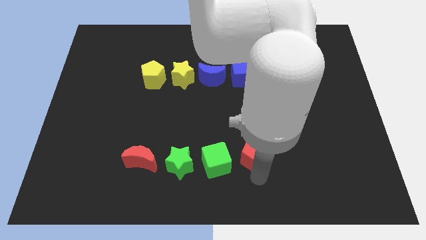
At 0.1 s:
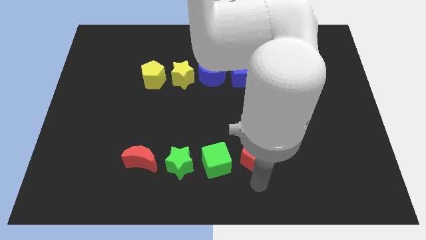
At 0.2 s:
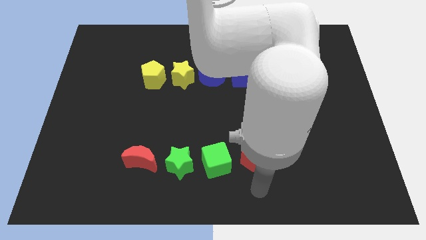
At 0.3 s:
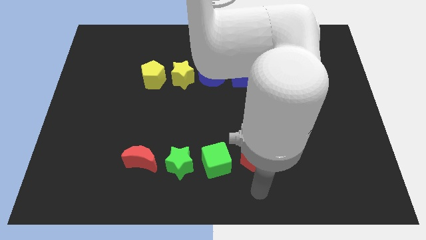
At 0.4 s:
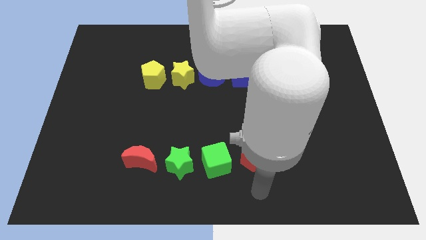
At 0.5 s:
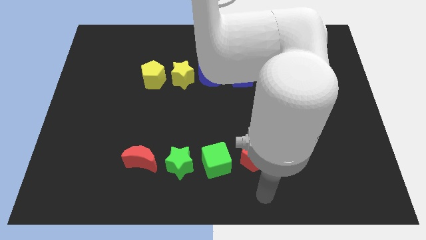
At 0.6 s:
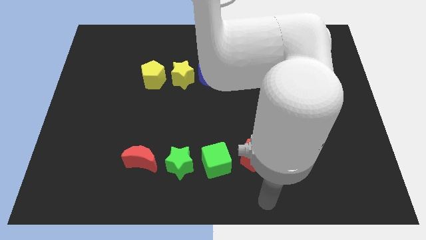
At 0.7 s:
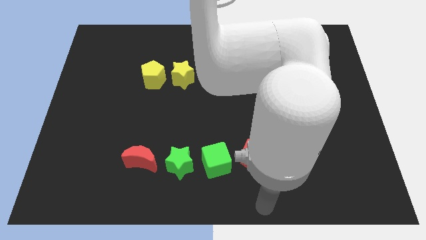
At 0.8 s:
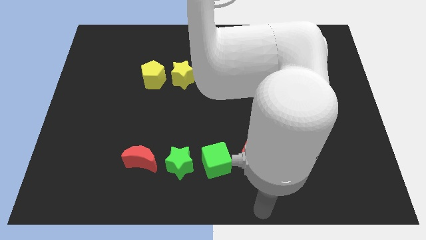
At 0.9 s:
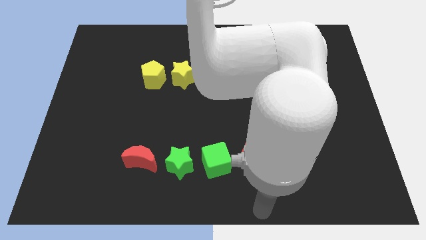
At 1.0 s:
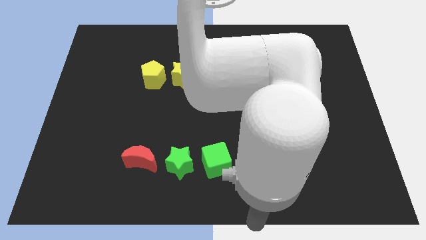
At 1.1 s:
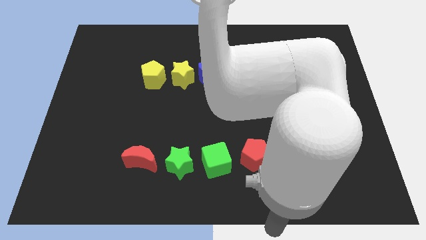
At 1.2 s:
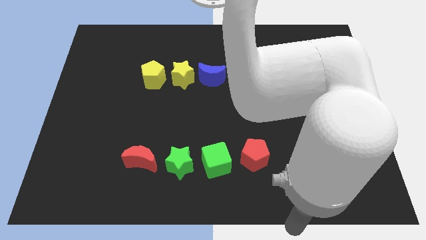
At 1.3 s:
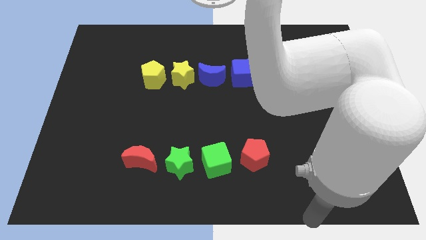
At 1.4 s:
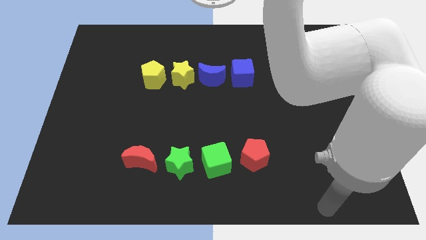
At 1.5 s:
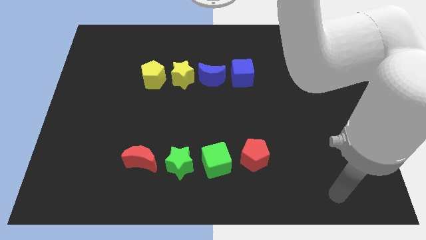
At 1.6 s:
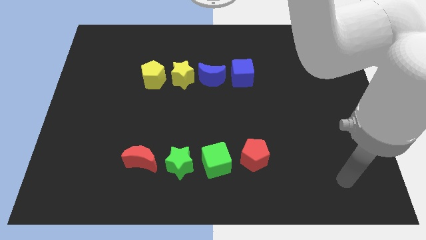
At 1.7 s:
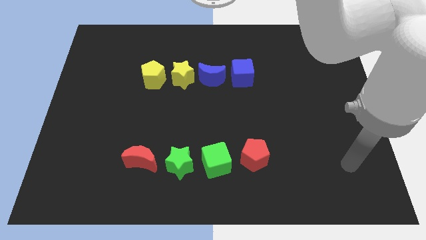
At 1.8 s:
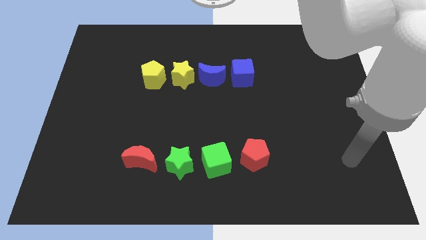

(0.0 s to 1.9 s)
move your arm away from the red pentagon

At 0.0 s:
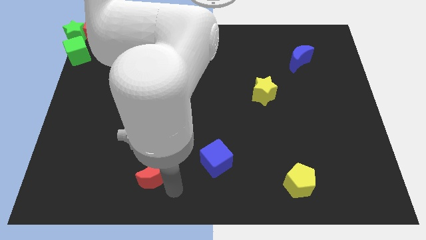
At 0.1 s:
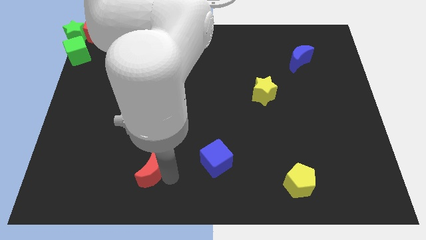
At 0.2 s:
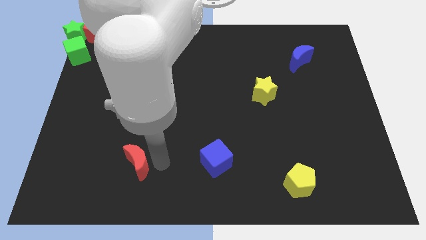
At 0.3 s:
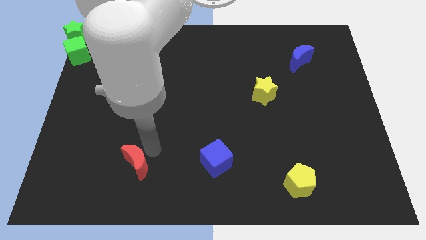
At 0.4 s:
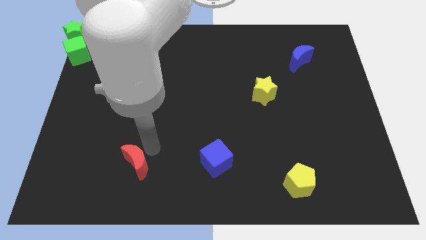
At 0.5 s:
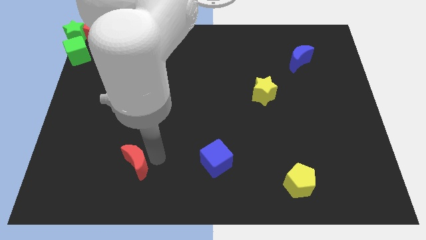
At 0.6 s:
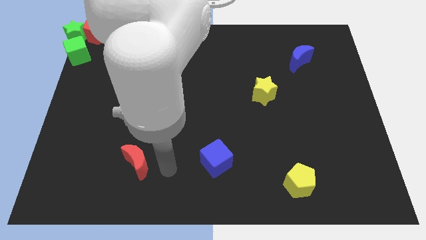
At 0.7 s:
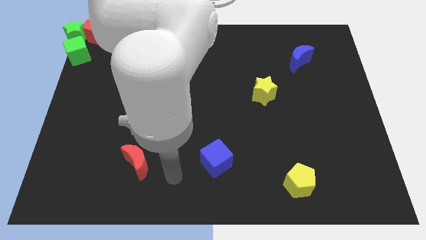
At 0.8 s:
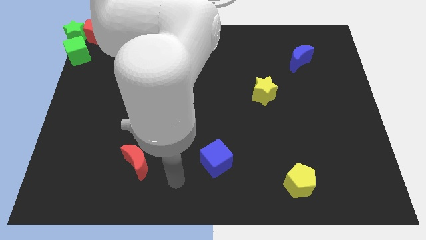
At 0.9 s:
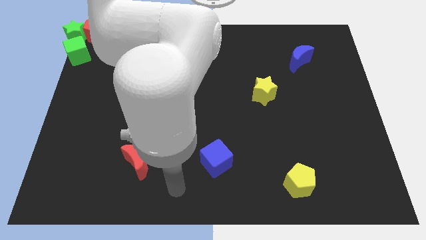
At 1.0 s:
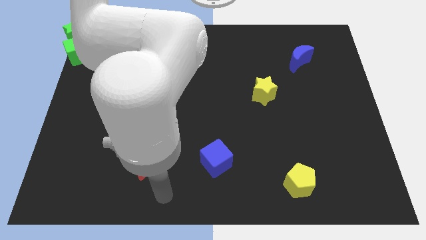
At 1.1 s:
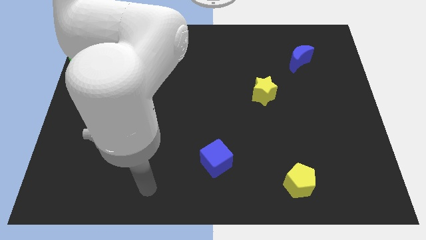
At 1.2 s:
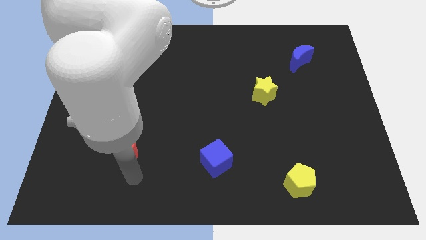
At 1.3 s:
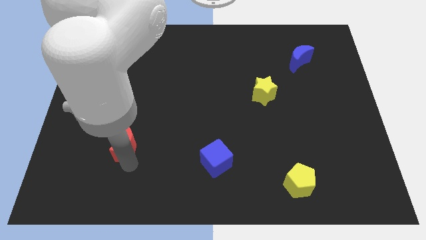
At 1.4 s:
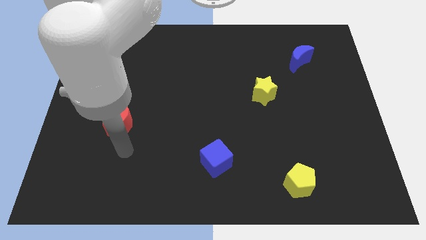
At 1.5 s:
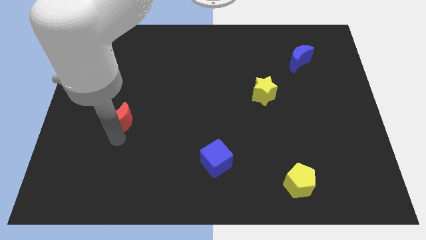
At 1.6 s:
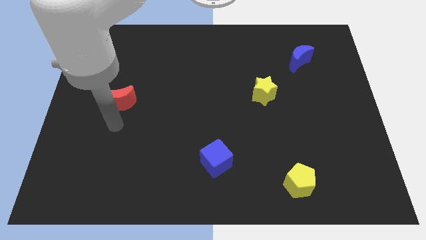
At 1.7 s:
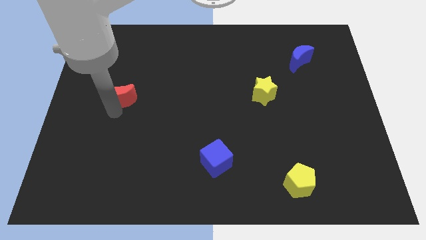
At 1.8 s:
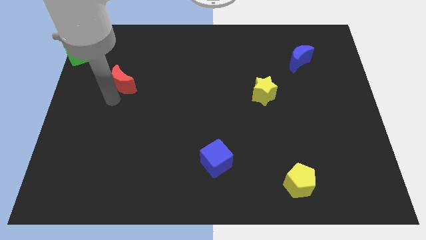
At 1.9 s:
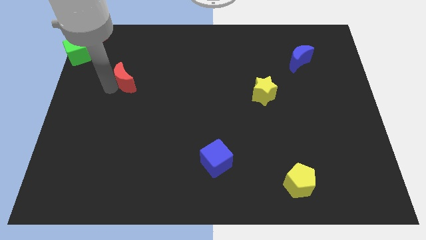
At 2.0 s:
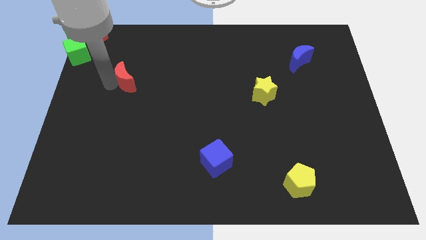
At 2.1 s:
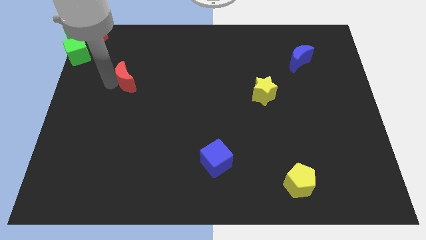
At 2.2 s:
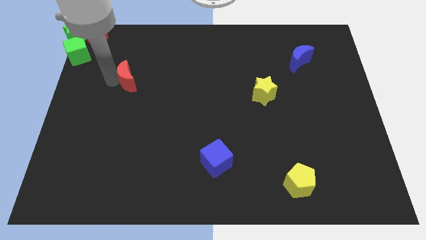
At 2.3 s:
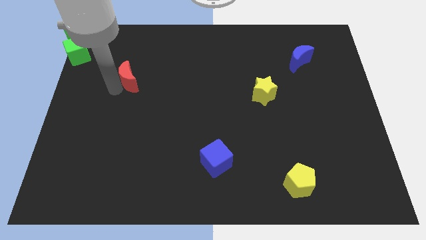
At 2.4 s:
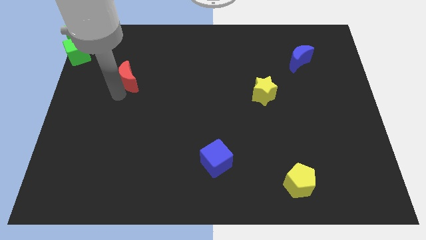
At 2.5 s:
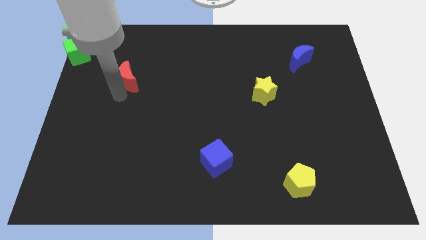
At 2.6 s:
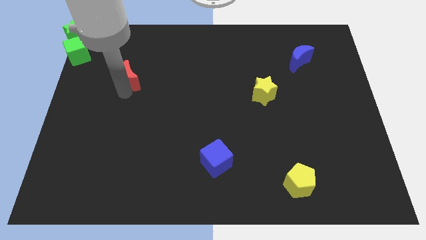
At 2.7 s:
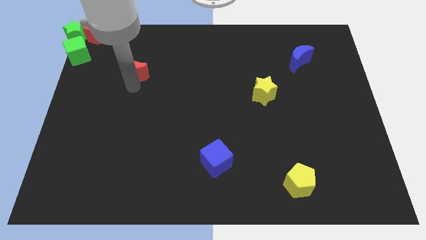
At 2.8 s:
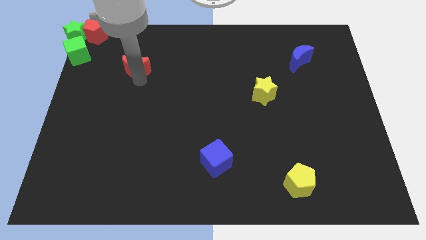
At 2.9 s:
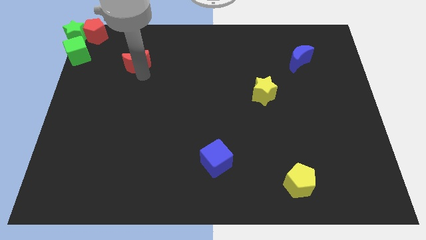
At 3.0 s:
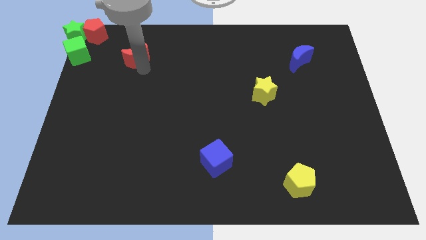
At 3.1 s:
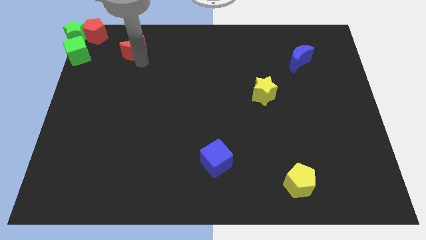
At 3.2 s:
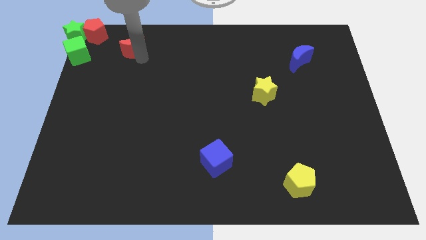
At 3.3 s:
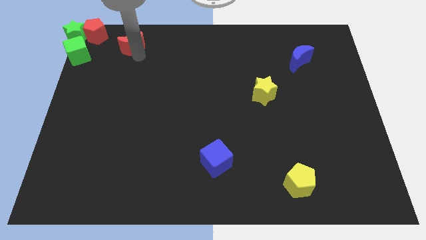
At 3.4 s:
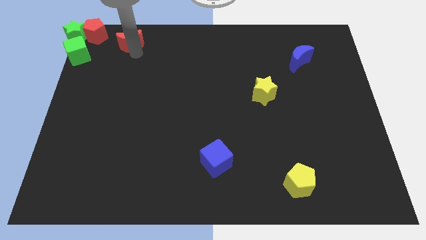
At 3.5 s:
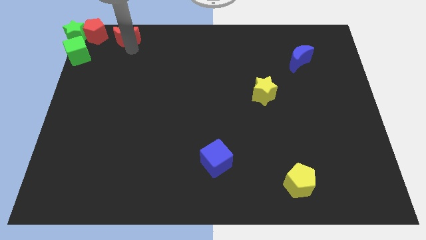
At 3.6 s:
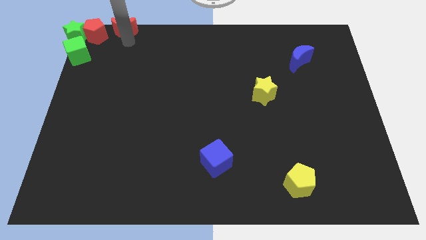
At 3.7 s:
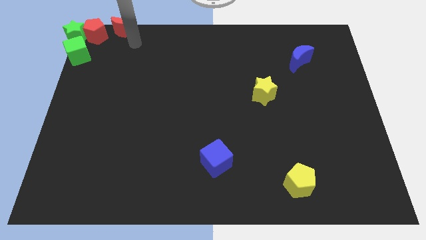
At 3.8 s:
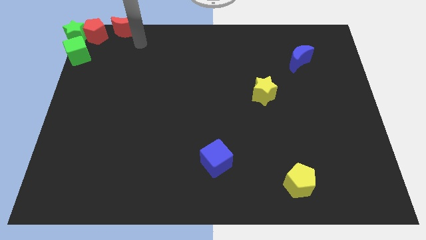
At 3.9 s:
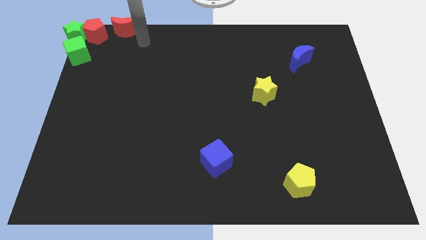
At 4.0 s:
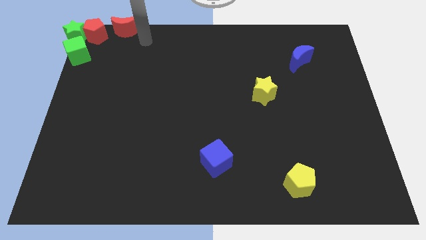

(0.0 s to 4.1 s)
place the red moon right to the red pentagon

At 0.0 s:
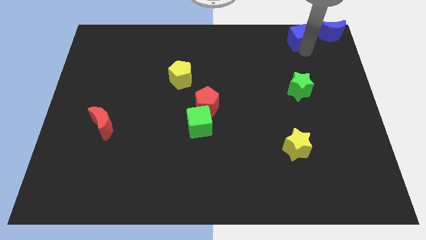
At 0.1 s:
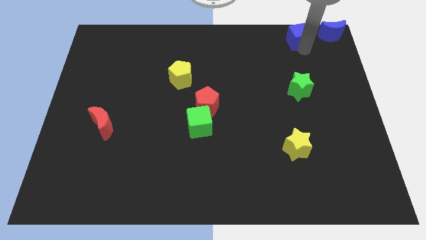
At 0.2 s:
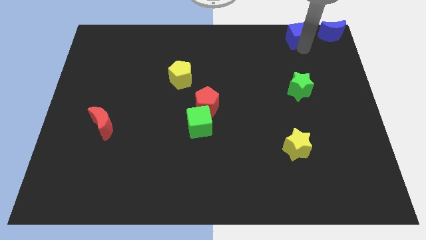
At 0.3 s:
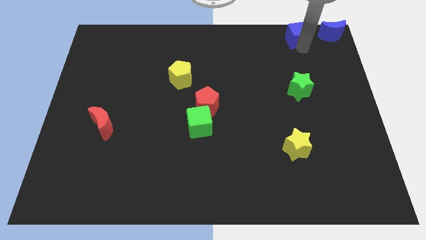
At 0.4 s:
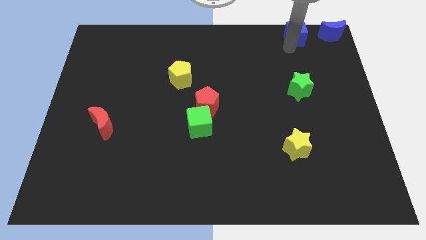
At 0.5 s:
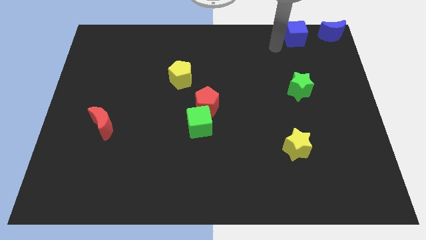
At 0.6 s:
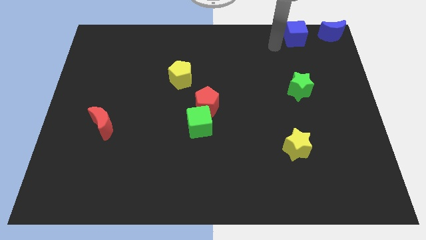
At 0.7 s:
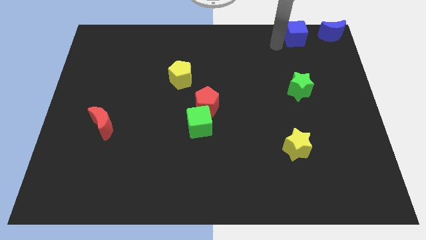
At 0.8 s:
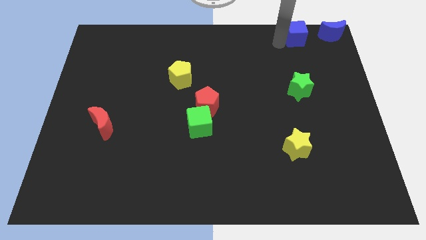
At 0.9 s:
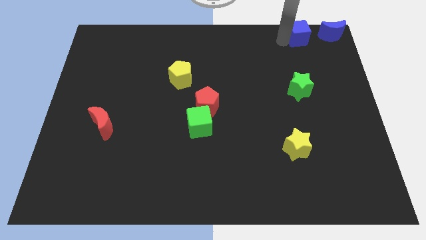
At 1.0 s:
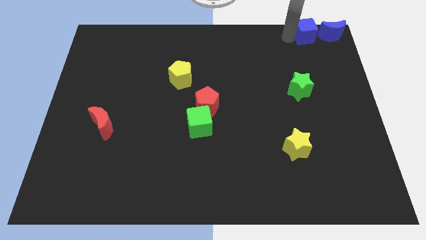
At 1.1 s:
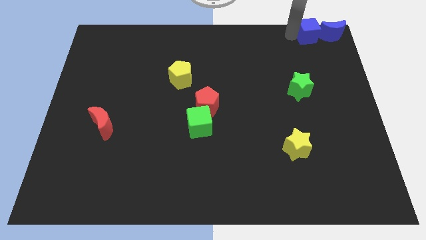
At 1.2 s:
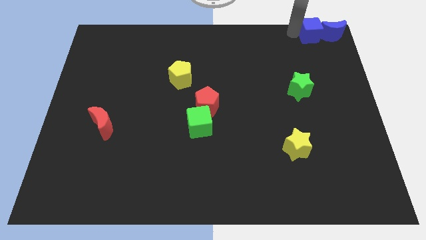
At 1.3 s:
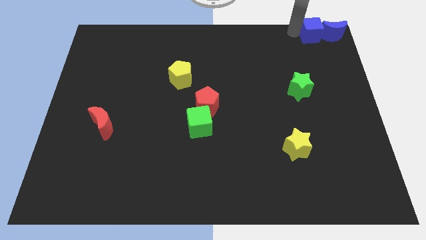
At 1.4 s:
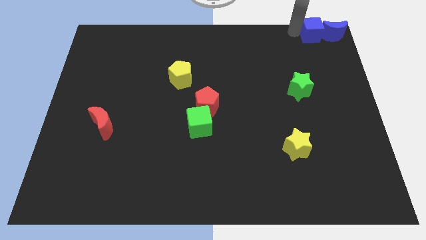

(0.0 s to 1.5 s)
push the blue cube to the left of the blue crescent

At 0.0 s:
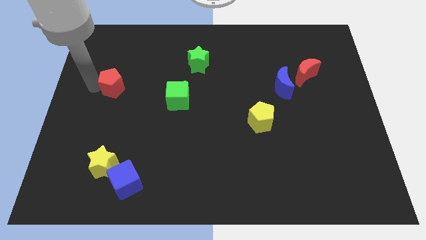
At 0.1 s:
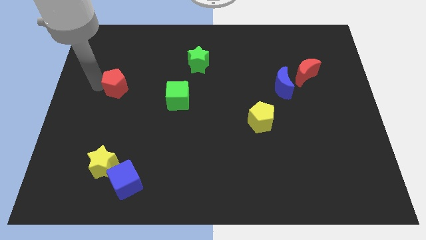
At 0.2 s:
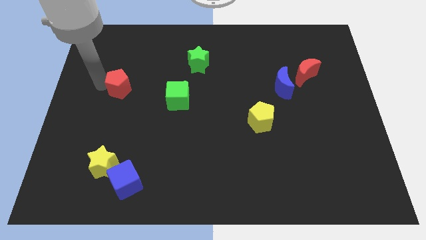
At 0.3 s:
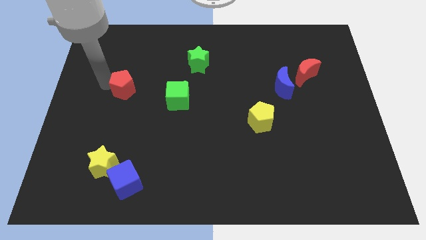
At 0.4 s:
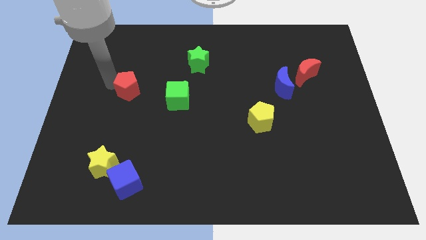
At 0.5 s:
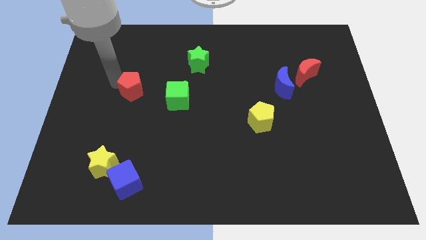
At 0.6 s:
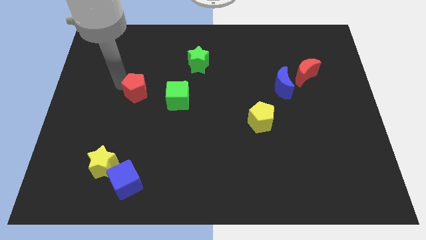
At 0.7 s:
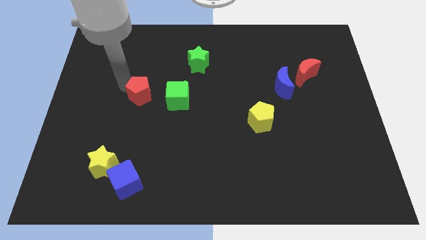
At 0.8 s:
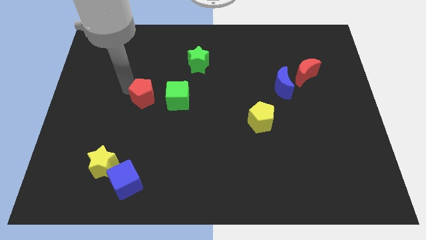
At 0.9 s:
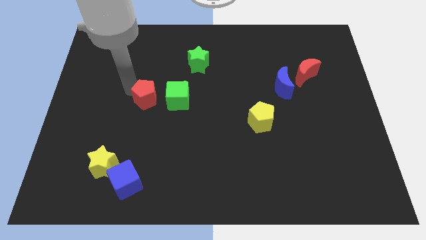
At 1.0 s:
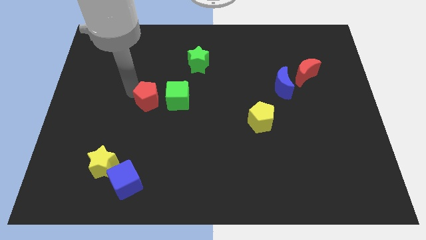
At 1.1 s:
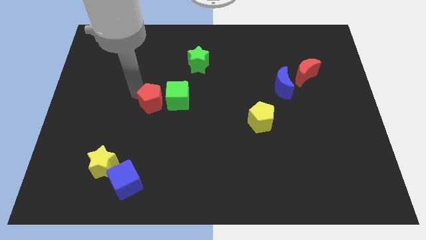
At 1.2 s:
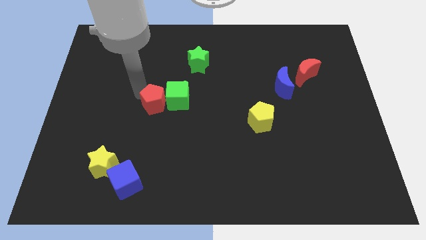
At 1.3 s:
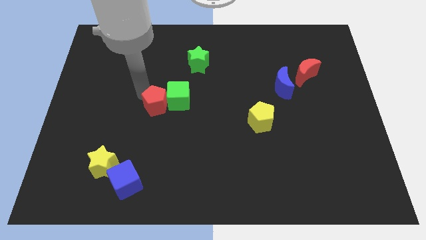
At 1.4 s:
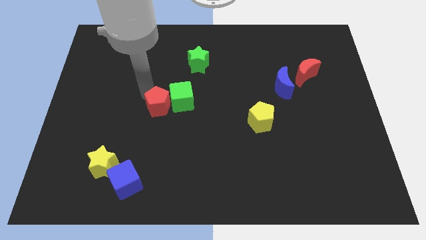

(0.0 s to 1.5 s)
push the red pentagon into the green cube
